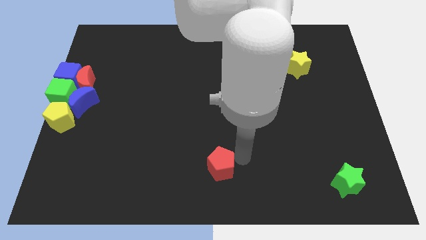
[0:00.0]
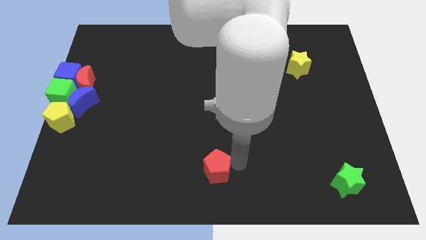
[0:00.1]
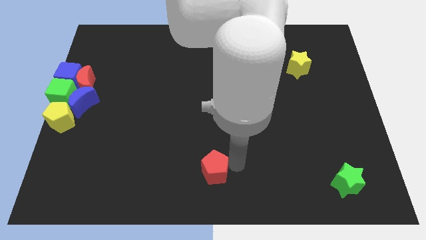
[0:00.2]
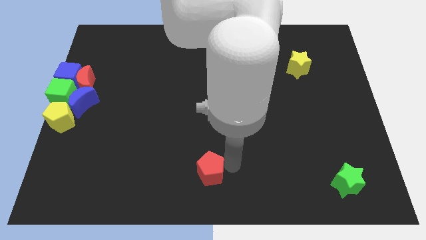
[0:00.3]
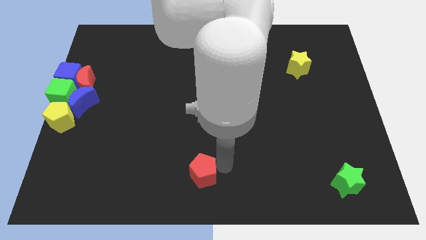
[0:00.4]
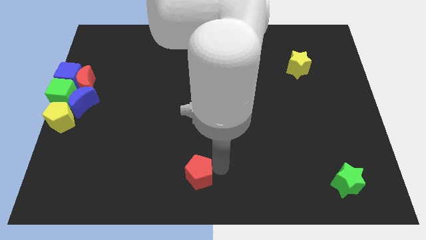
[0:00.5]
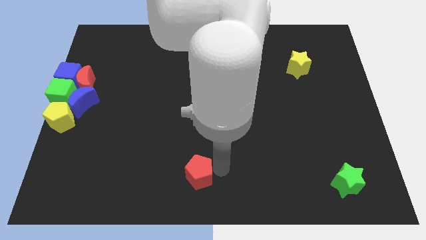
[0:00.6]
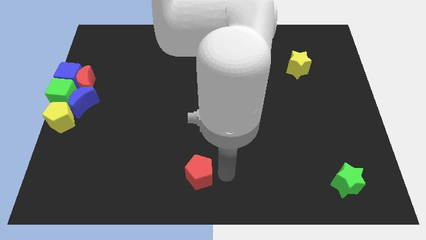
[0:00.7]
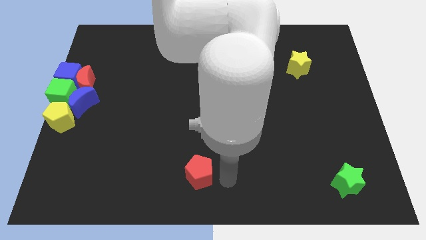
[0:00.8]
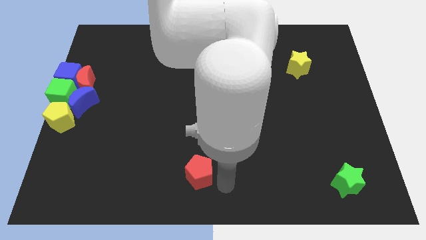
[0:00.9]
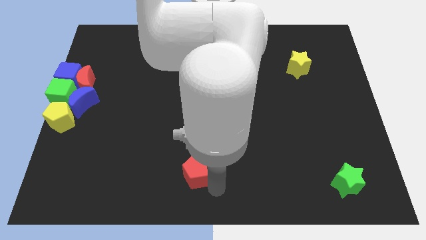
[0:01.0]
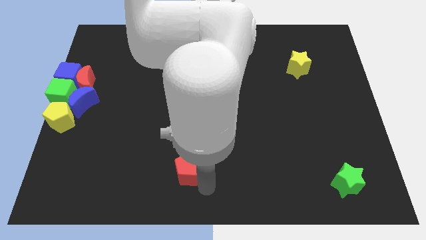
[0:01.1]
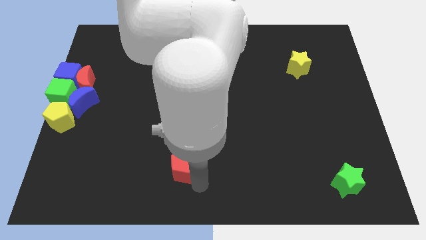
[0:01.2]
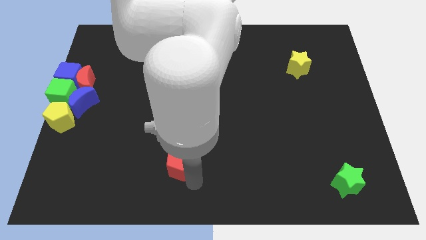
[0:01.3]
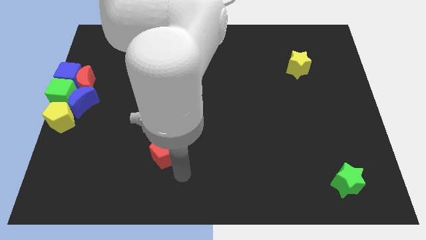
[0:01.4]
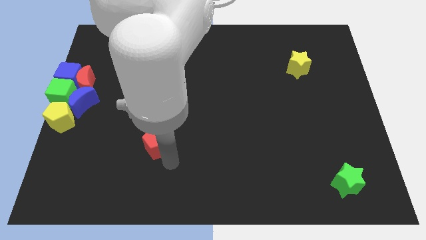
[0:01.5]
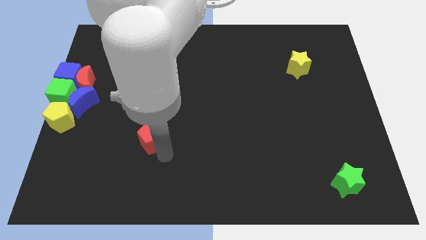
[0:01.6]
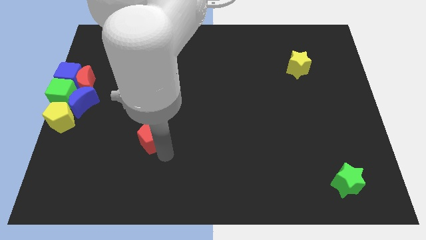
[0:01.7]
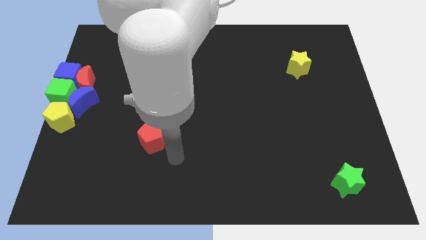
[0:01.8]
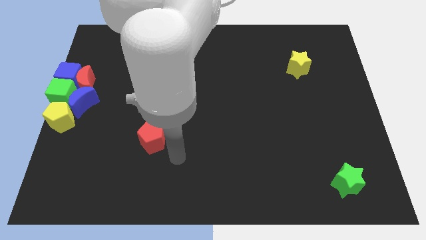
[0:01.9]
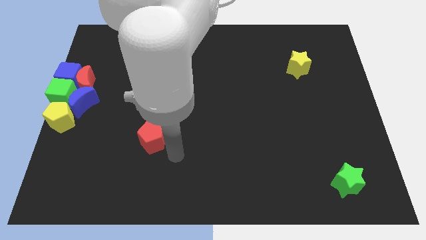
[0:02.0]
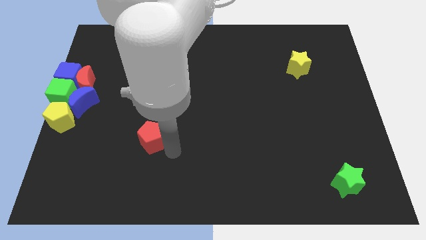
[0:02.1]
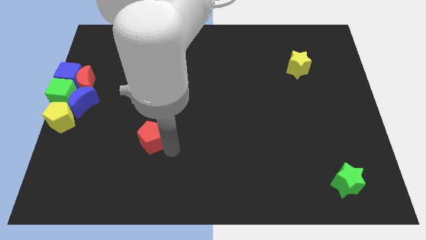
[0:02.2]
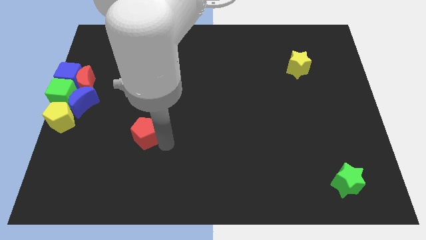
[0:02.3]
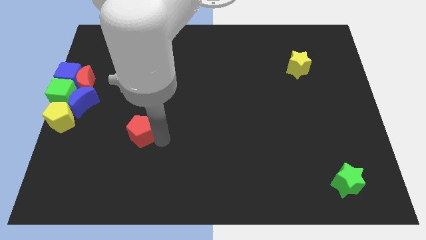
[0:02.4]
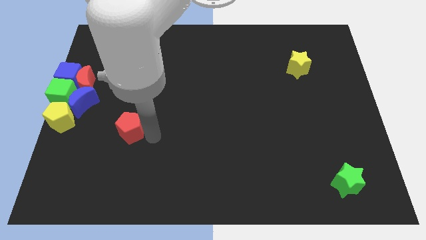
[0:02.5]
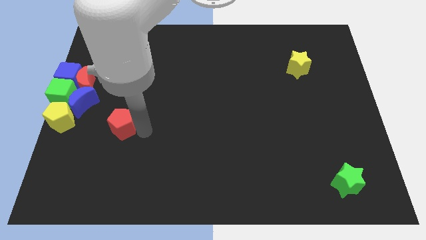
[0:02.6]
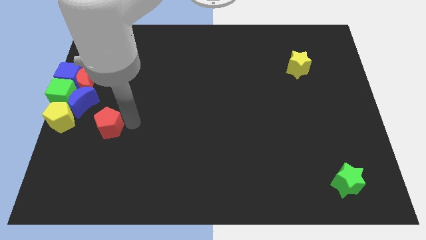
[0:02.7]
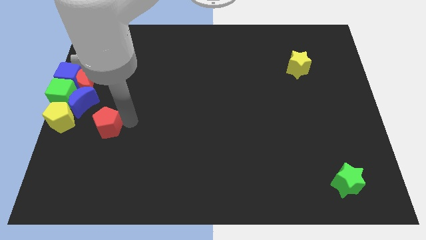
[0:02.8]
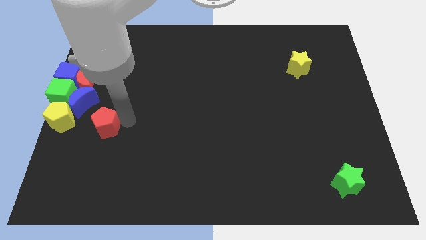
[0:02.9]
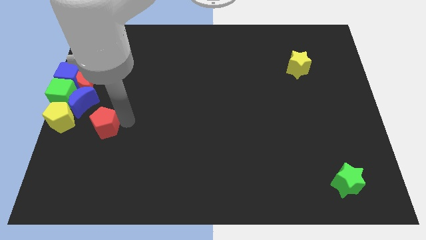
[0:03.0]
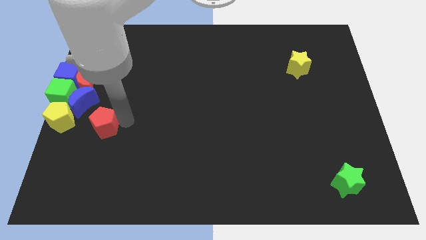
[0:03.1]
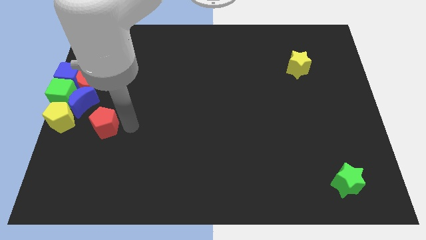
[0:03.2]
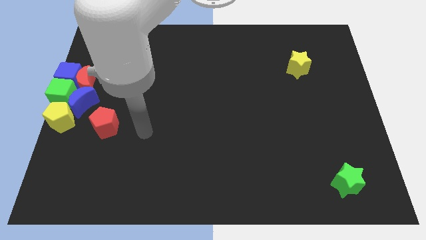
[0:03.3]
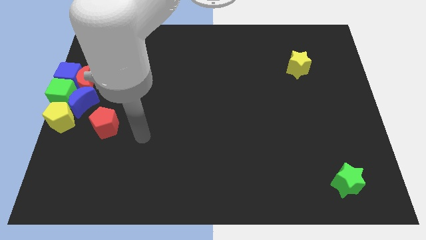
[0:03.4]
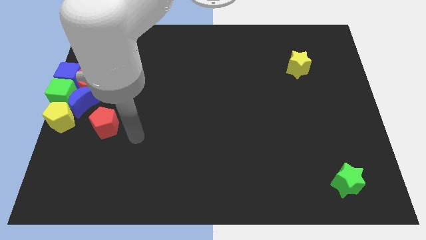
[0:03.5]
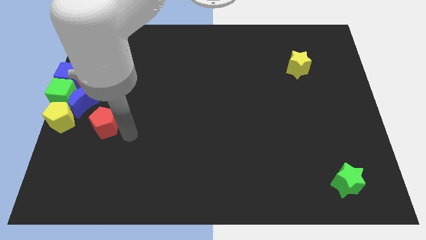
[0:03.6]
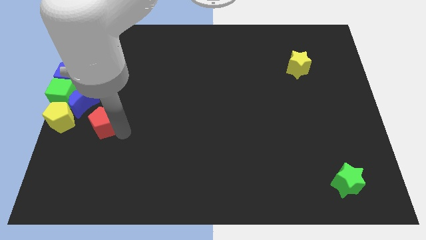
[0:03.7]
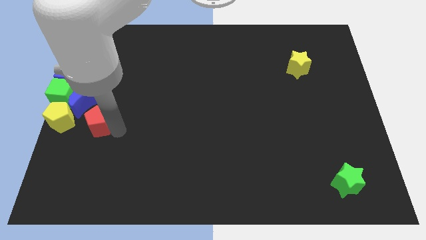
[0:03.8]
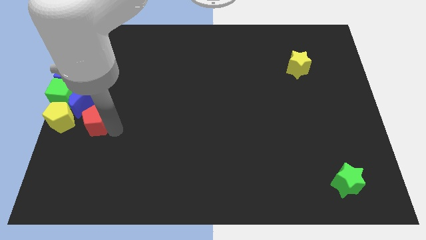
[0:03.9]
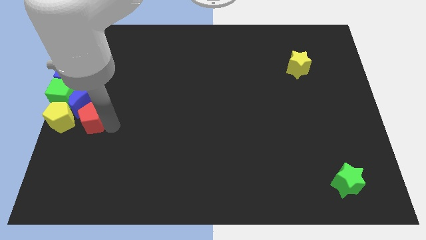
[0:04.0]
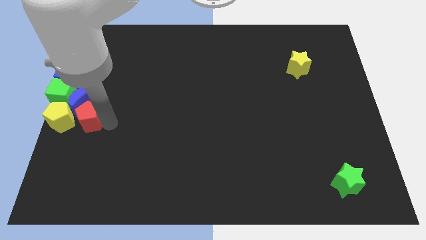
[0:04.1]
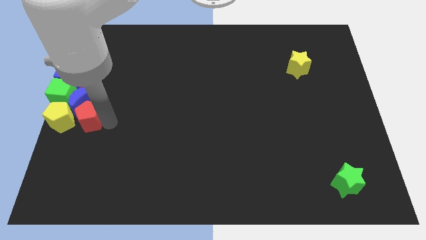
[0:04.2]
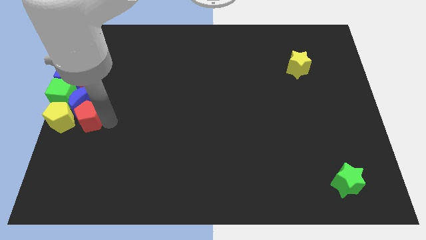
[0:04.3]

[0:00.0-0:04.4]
push the red pentagon to the right of yellow pentagon

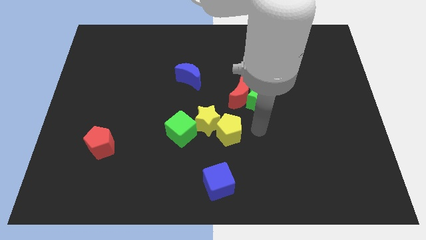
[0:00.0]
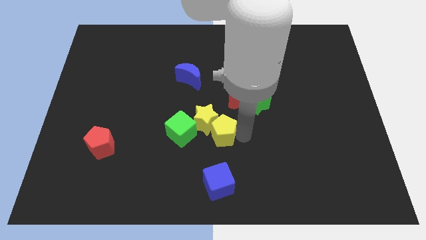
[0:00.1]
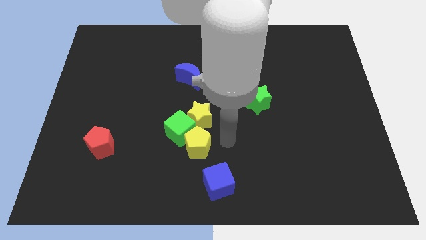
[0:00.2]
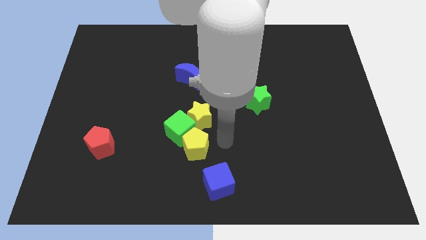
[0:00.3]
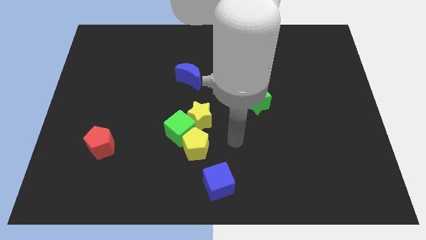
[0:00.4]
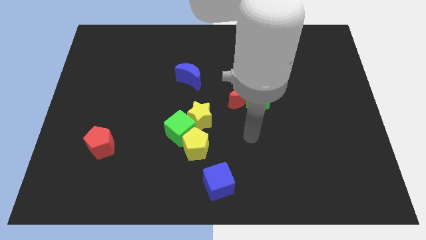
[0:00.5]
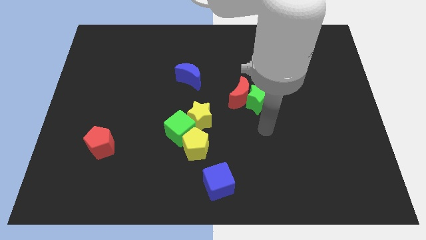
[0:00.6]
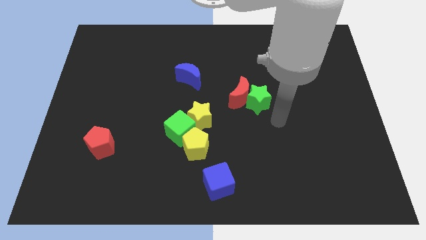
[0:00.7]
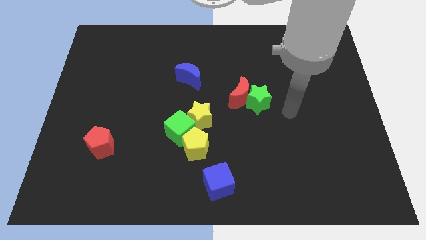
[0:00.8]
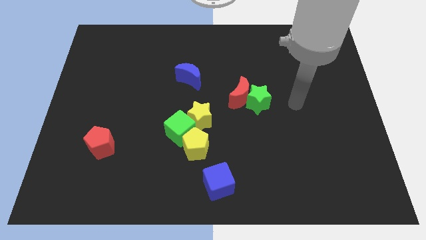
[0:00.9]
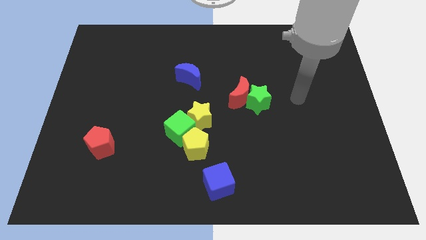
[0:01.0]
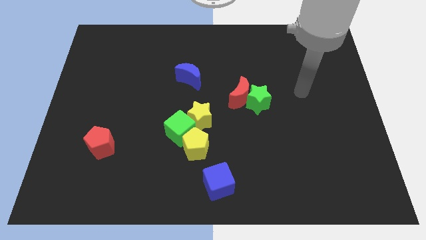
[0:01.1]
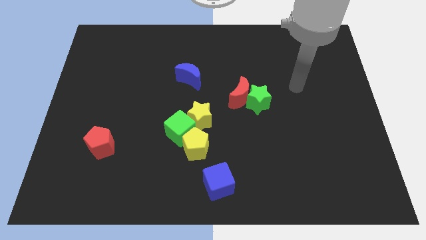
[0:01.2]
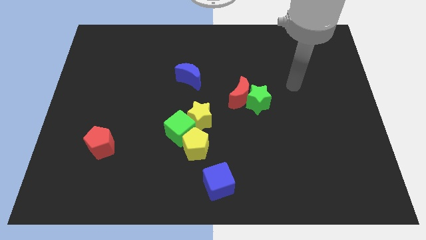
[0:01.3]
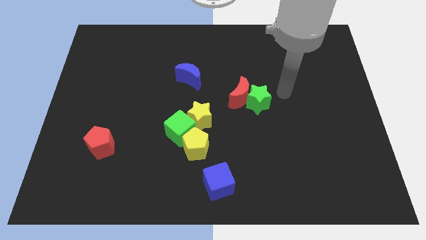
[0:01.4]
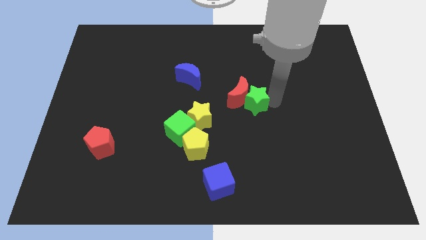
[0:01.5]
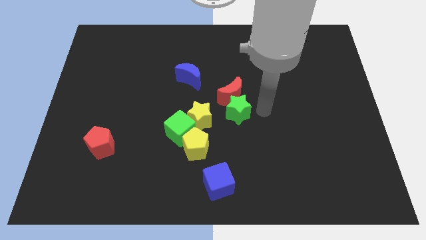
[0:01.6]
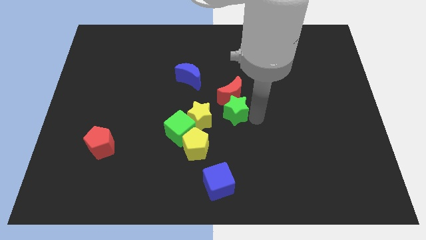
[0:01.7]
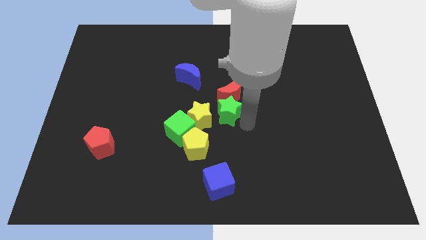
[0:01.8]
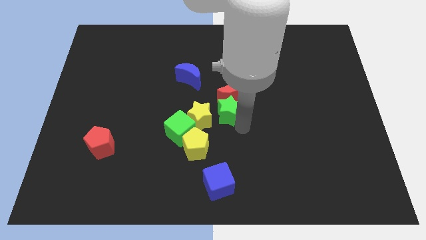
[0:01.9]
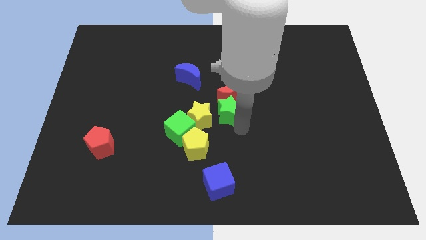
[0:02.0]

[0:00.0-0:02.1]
place green star to the right of yellow star

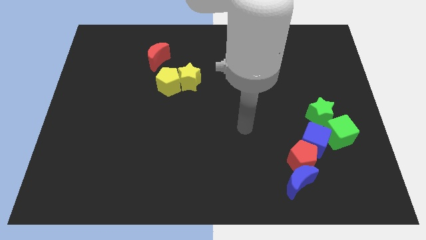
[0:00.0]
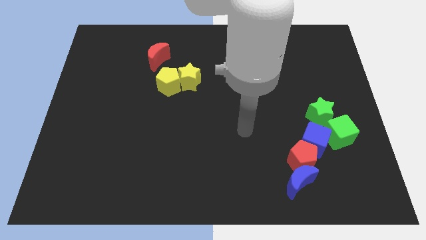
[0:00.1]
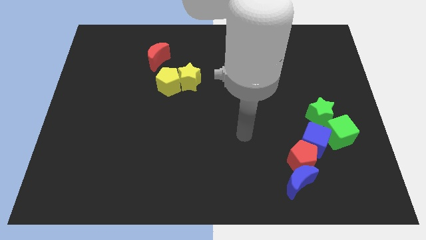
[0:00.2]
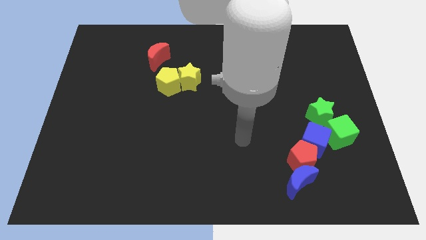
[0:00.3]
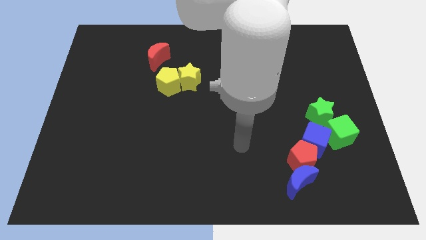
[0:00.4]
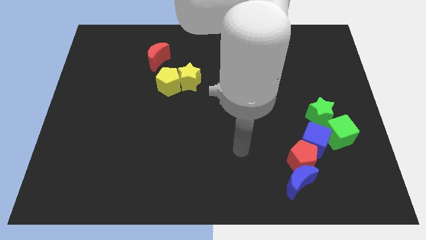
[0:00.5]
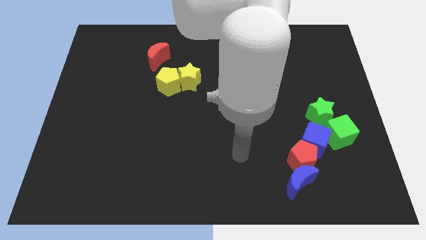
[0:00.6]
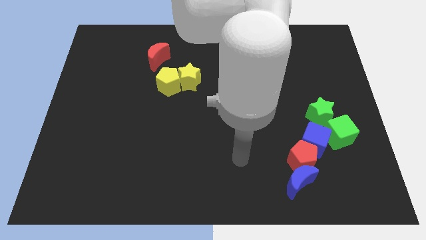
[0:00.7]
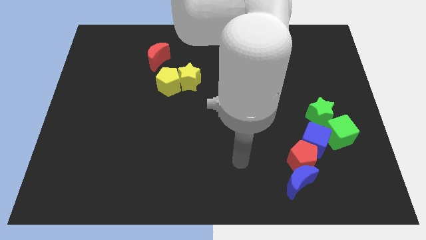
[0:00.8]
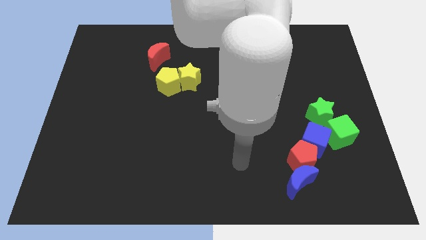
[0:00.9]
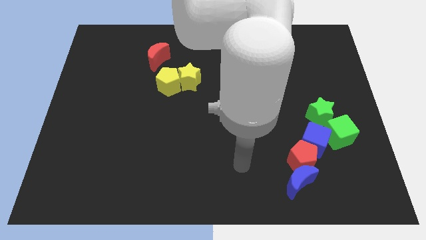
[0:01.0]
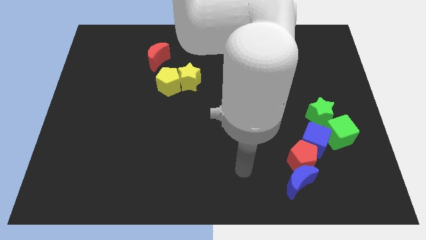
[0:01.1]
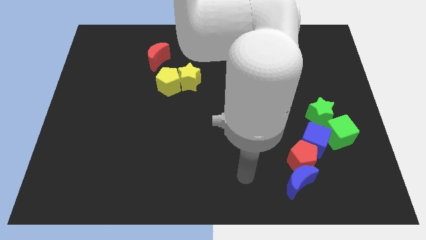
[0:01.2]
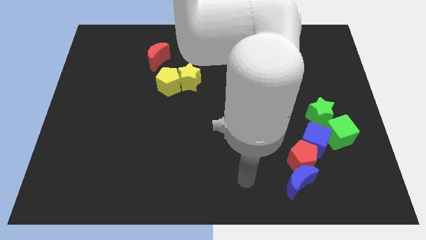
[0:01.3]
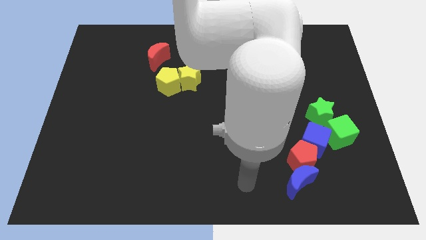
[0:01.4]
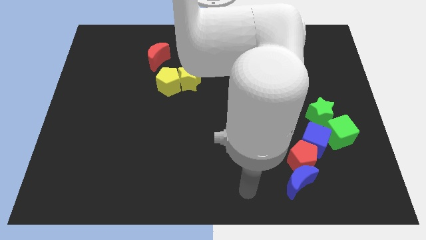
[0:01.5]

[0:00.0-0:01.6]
point your arm to the left side of blue moon

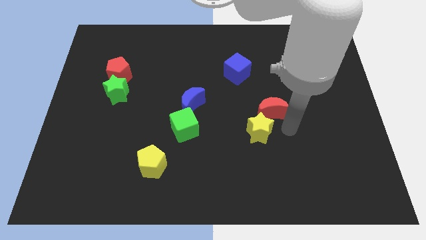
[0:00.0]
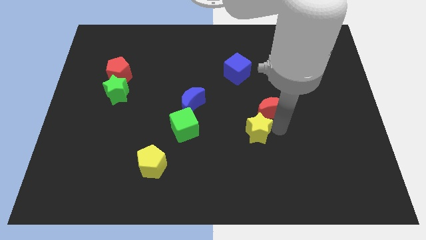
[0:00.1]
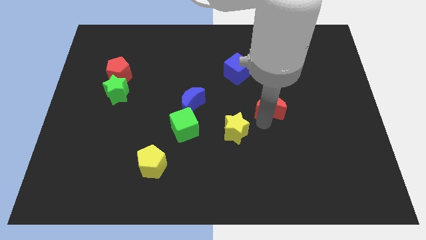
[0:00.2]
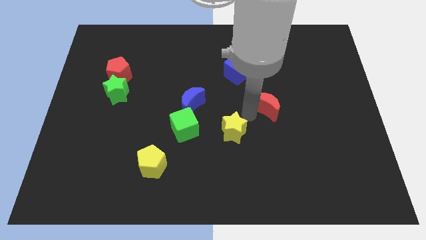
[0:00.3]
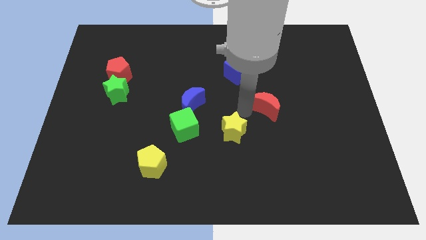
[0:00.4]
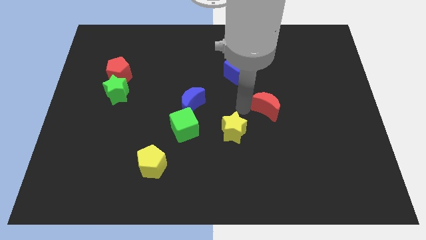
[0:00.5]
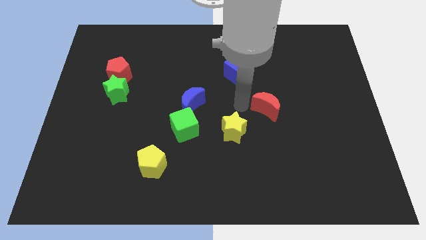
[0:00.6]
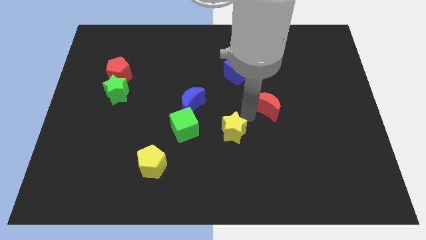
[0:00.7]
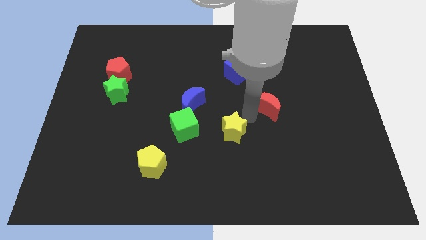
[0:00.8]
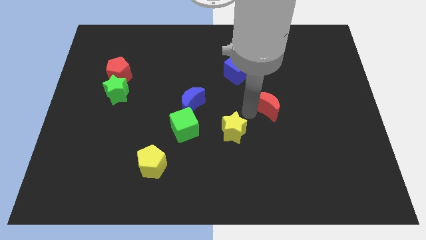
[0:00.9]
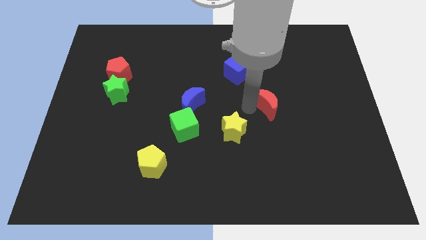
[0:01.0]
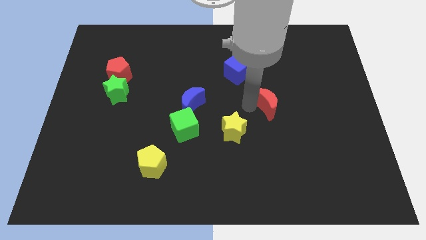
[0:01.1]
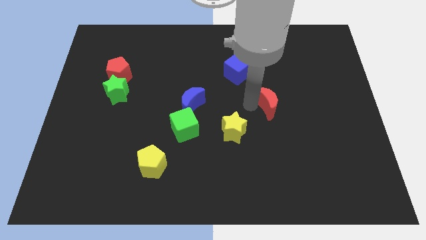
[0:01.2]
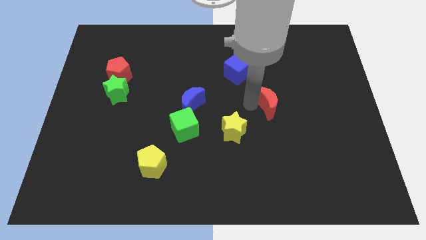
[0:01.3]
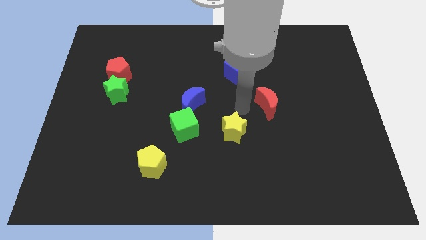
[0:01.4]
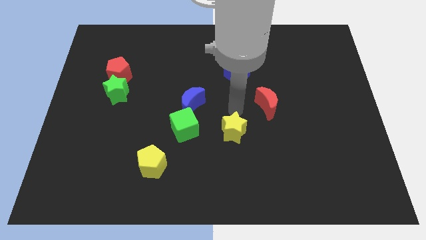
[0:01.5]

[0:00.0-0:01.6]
separate the yellow star and the red crescent
